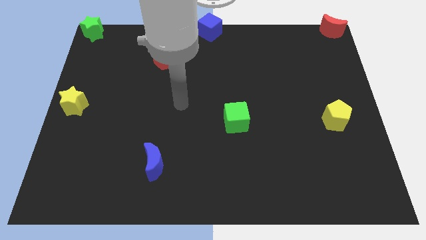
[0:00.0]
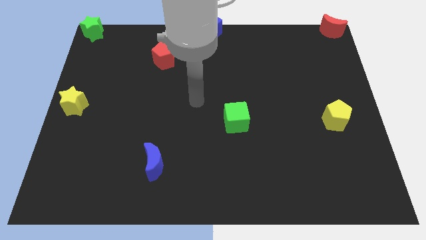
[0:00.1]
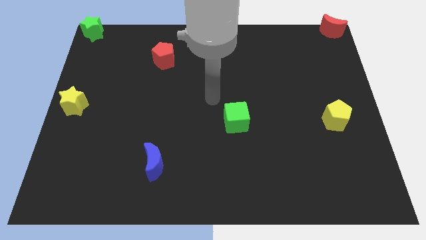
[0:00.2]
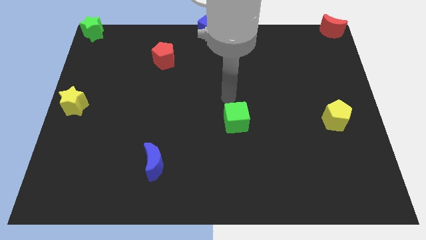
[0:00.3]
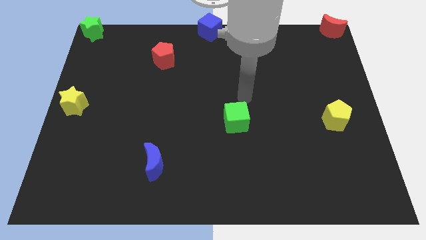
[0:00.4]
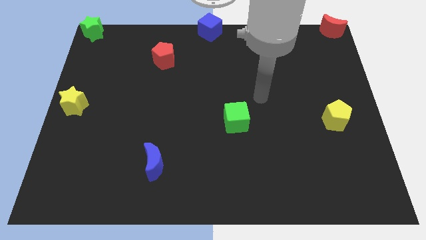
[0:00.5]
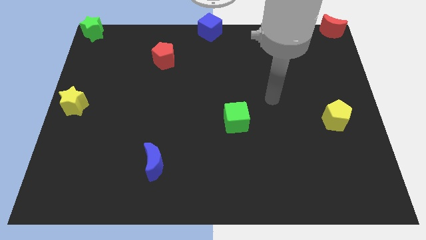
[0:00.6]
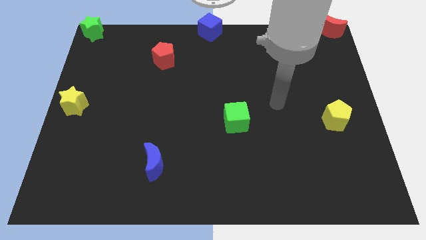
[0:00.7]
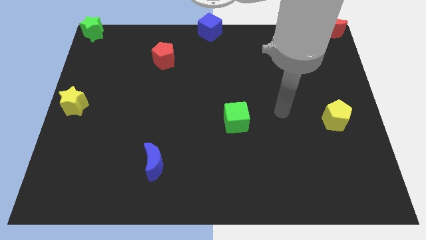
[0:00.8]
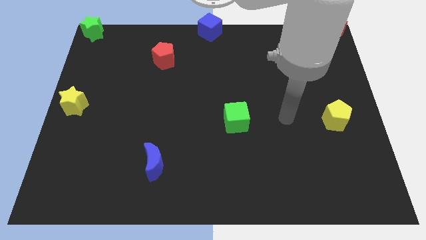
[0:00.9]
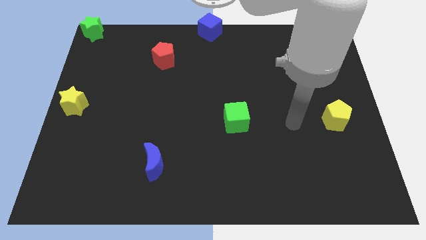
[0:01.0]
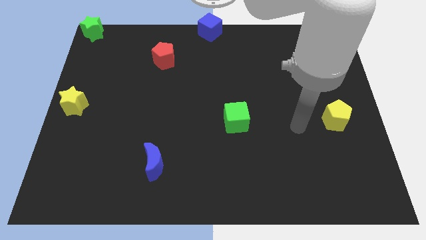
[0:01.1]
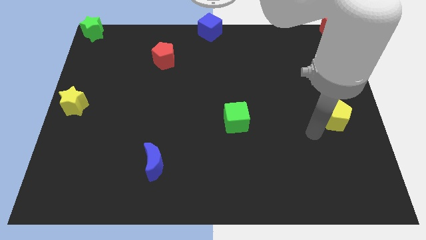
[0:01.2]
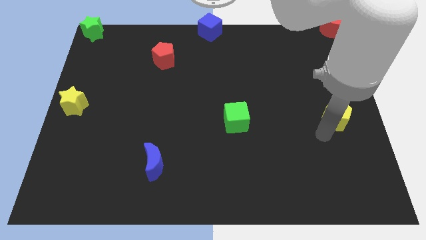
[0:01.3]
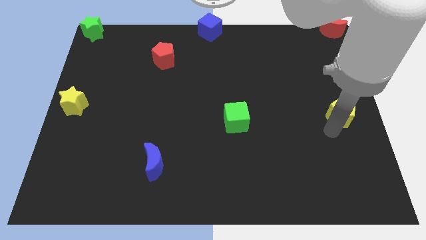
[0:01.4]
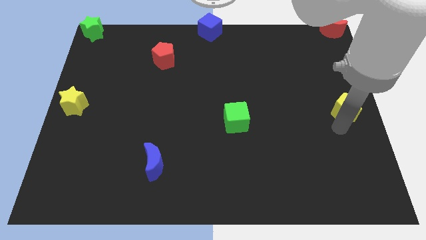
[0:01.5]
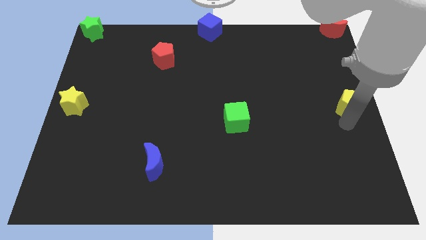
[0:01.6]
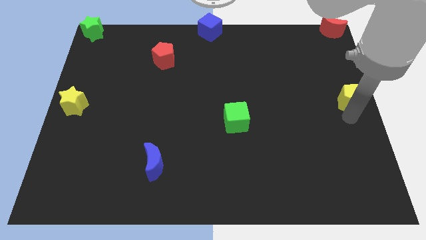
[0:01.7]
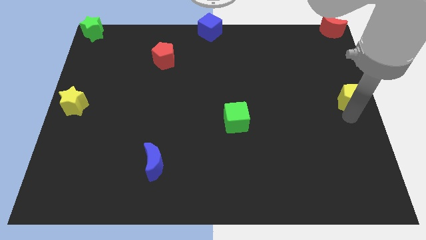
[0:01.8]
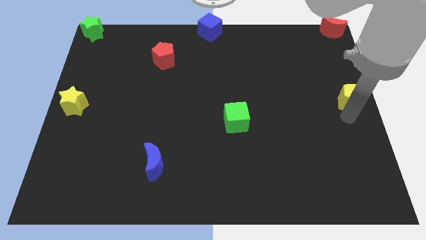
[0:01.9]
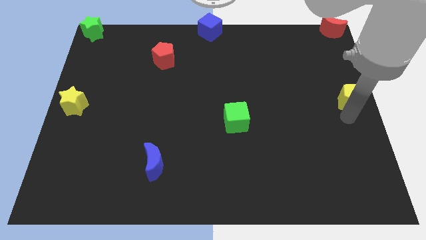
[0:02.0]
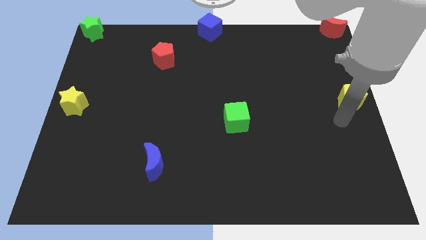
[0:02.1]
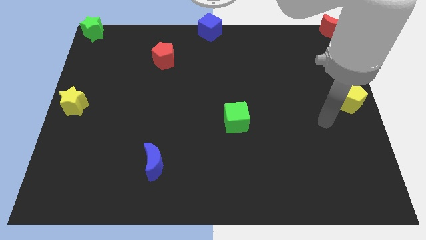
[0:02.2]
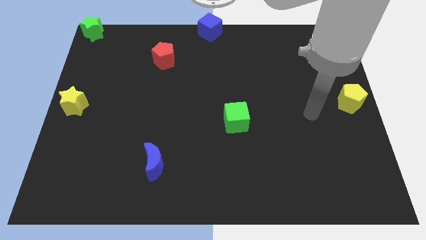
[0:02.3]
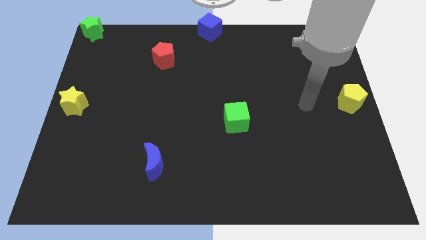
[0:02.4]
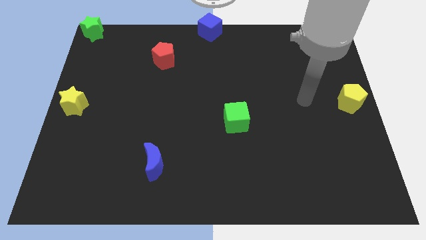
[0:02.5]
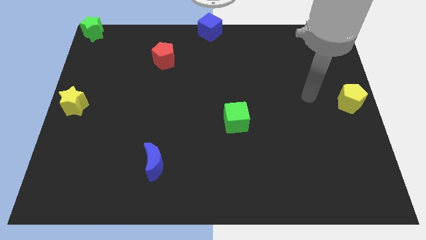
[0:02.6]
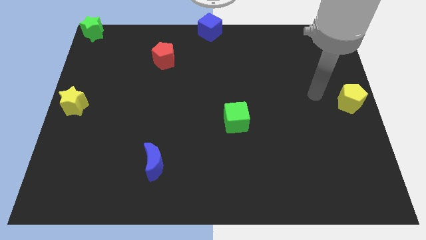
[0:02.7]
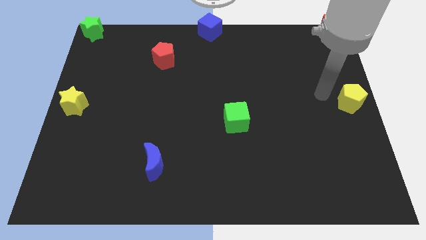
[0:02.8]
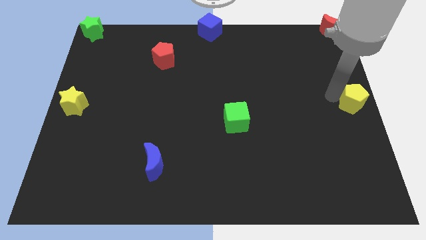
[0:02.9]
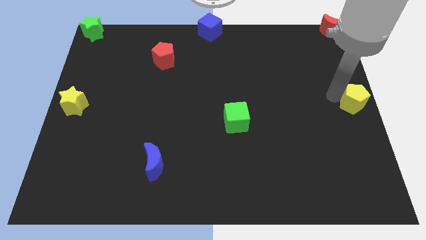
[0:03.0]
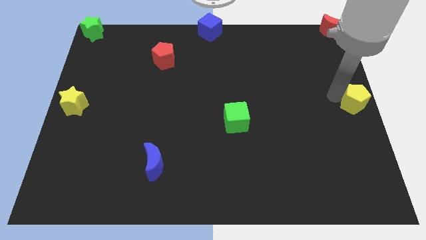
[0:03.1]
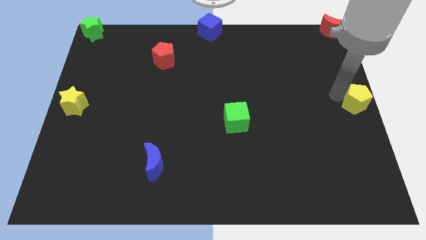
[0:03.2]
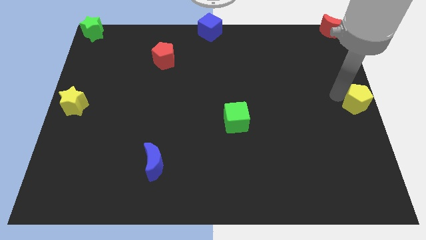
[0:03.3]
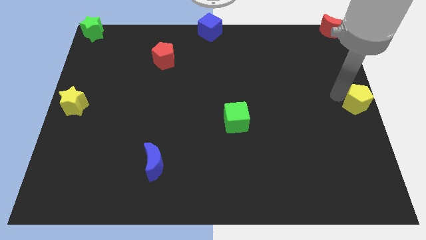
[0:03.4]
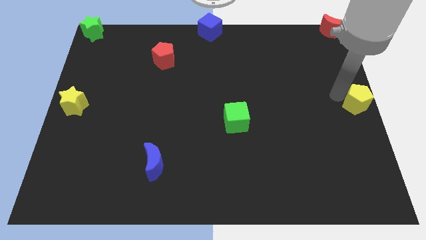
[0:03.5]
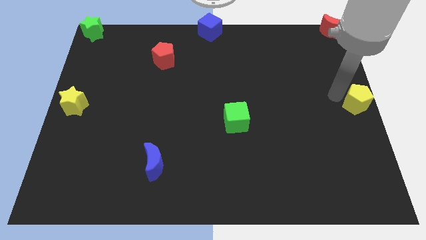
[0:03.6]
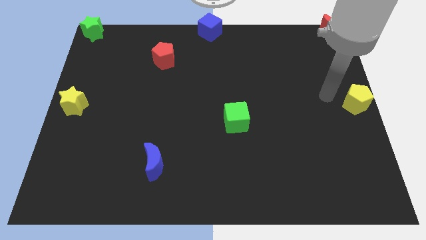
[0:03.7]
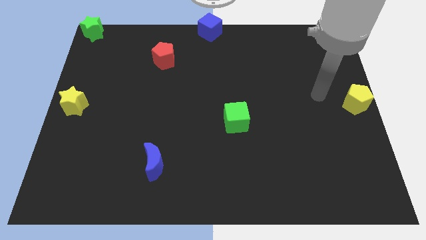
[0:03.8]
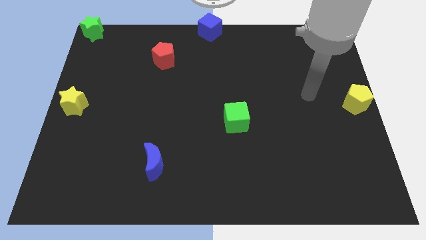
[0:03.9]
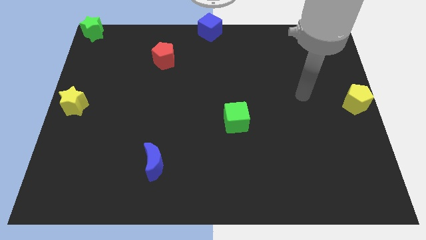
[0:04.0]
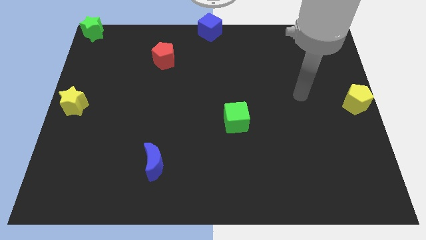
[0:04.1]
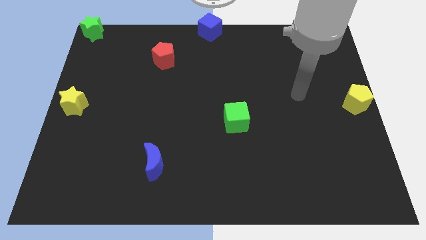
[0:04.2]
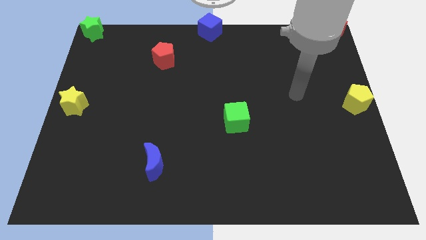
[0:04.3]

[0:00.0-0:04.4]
push the yellow pentagon to the center right

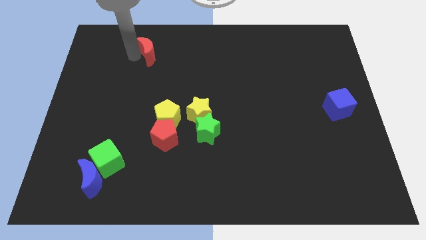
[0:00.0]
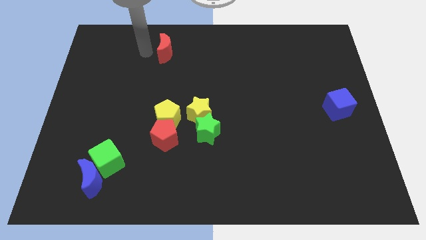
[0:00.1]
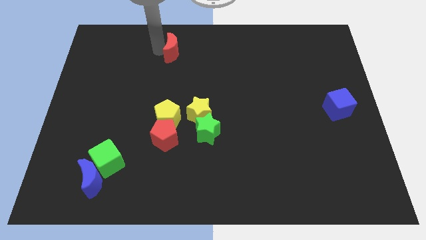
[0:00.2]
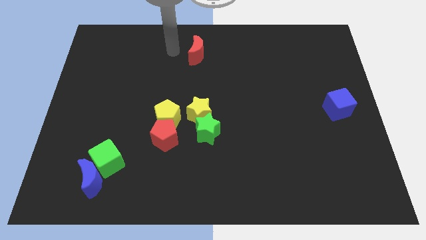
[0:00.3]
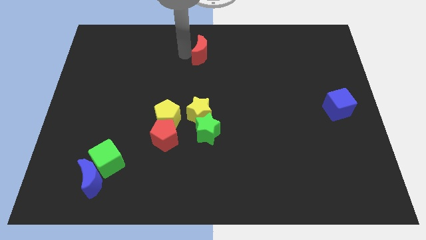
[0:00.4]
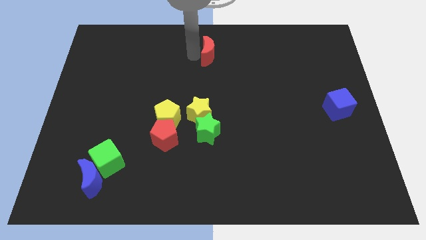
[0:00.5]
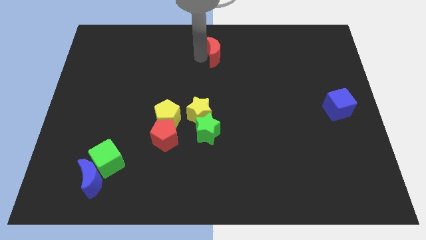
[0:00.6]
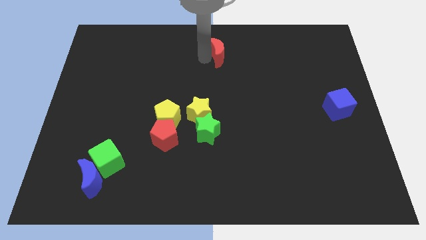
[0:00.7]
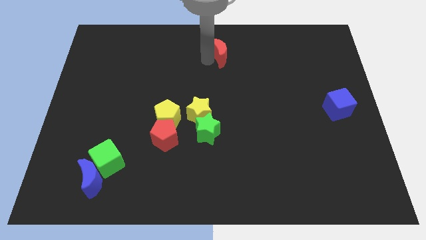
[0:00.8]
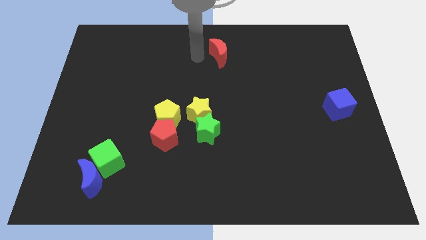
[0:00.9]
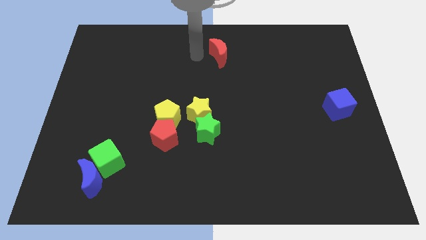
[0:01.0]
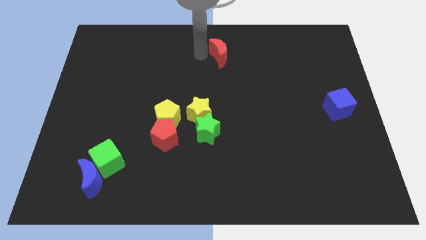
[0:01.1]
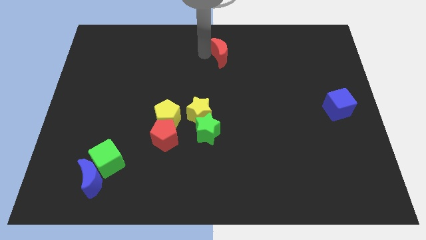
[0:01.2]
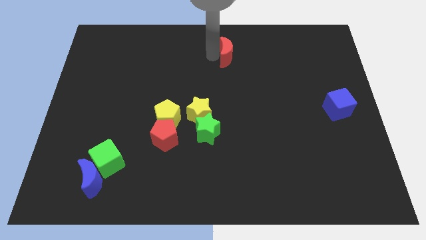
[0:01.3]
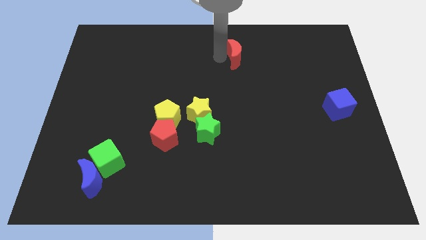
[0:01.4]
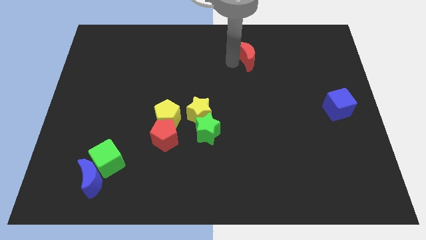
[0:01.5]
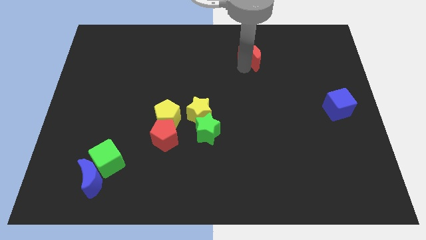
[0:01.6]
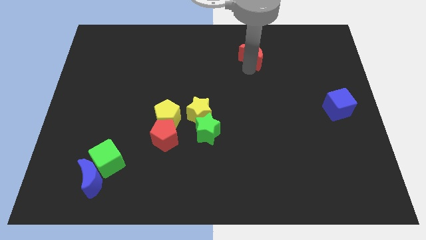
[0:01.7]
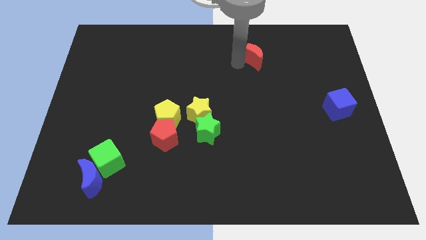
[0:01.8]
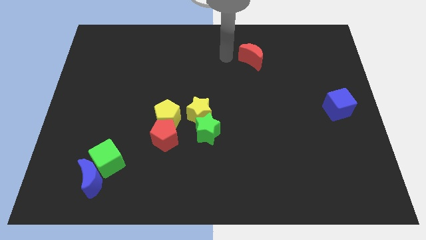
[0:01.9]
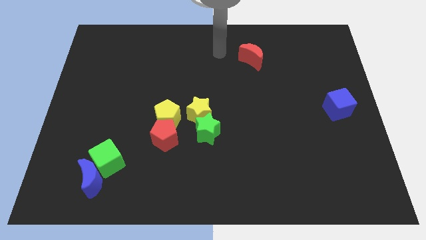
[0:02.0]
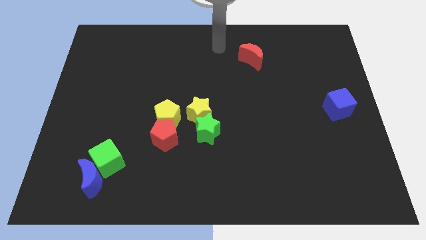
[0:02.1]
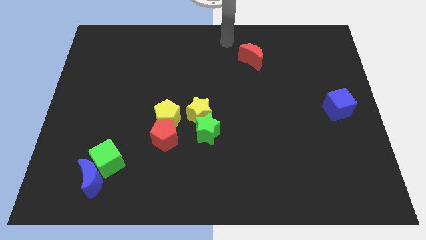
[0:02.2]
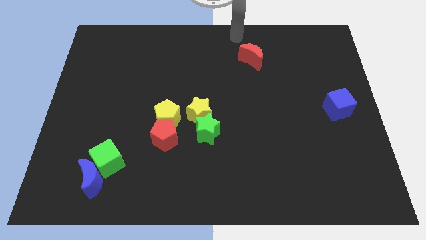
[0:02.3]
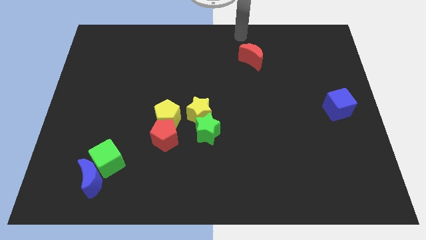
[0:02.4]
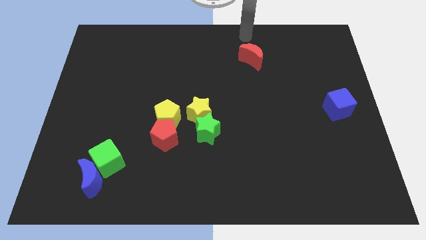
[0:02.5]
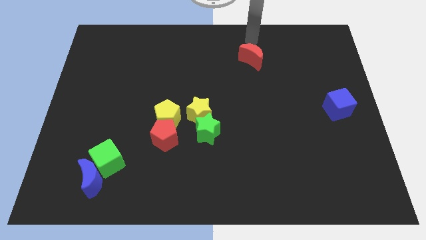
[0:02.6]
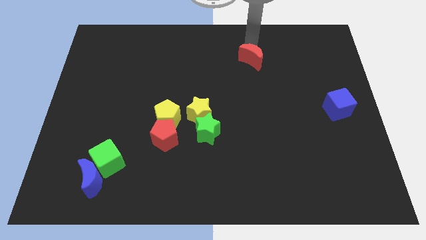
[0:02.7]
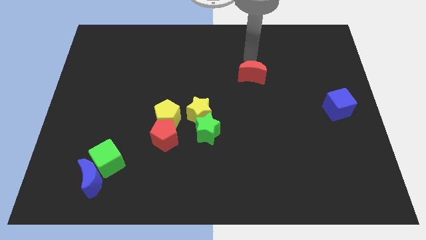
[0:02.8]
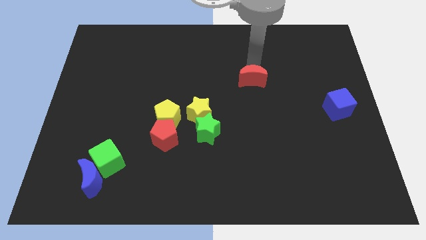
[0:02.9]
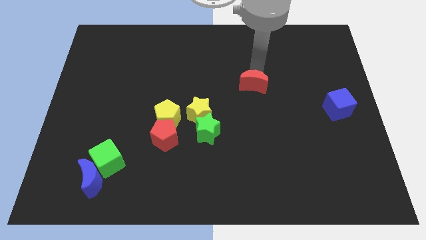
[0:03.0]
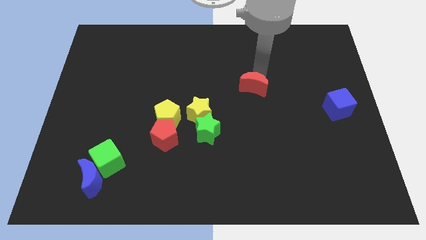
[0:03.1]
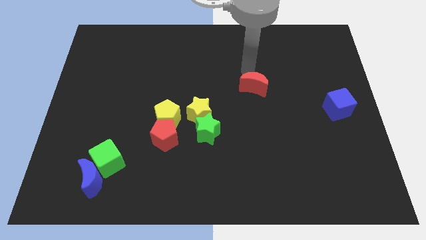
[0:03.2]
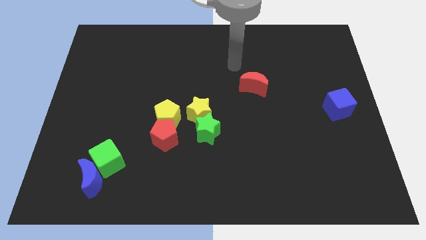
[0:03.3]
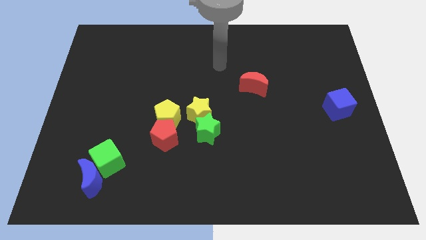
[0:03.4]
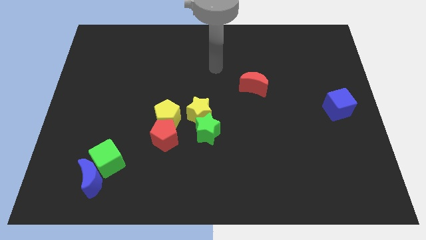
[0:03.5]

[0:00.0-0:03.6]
place the red moon diagonal to the yellow star

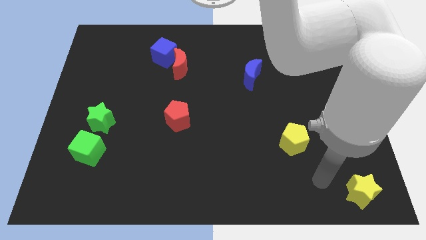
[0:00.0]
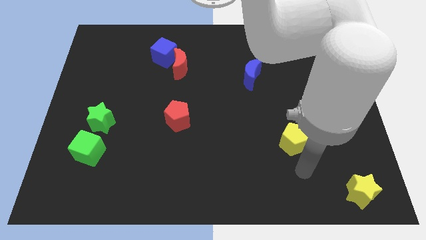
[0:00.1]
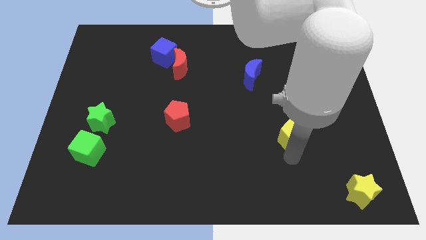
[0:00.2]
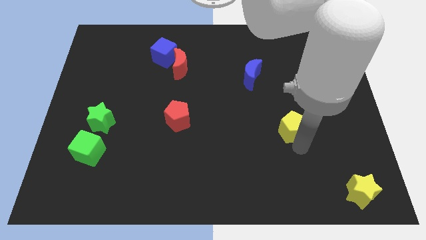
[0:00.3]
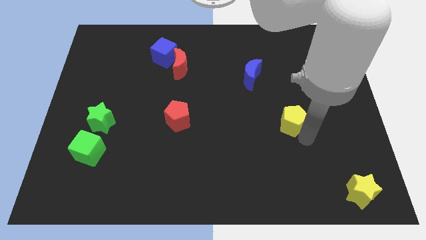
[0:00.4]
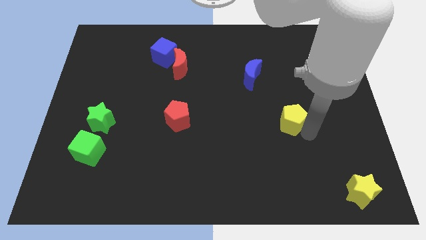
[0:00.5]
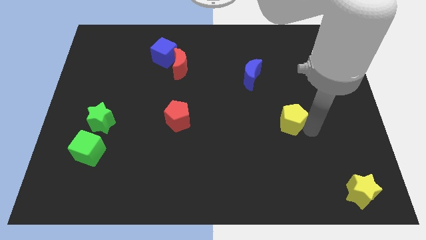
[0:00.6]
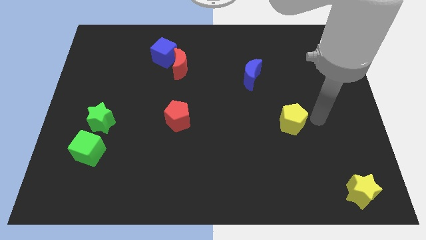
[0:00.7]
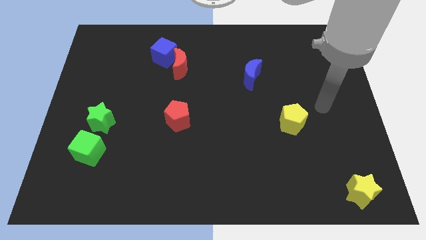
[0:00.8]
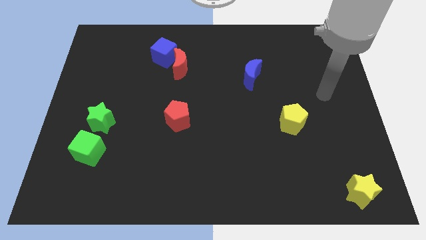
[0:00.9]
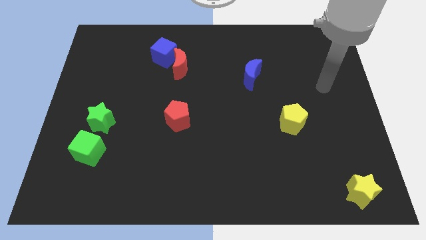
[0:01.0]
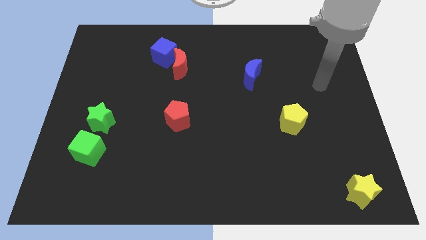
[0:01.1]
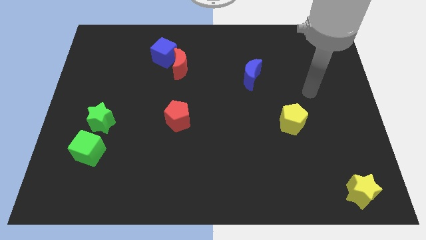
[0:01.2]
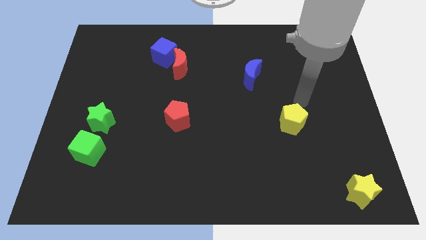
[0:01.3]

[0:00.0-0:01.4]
push the yellow pentagon to the right of the red pentagon
